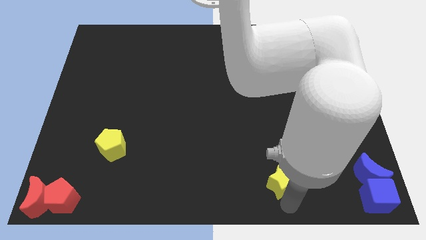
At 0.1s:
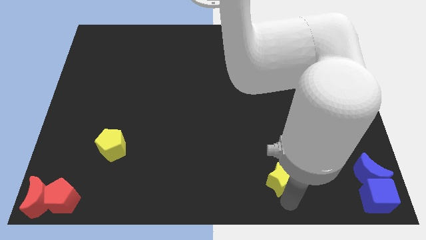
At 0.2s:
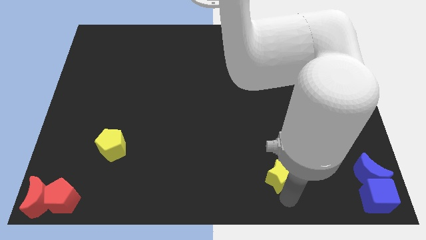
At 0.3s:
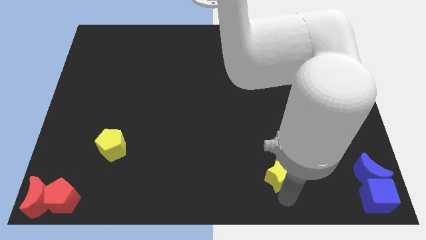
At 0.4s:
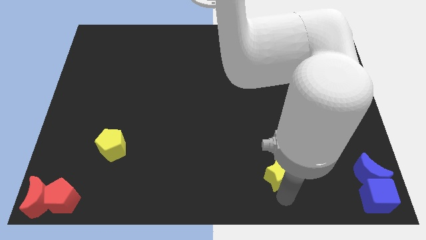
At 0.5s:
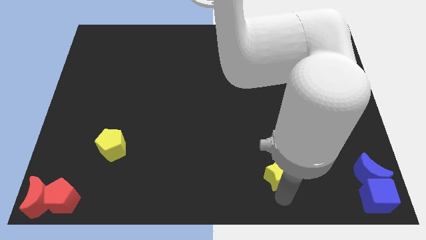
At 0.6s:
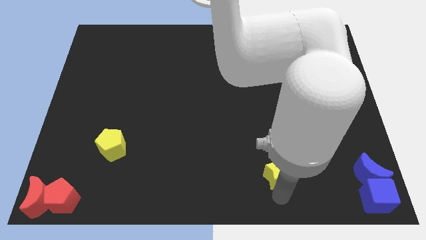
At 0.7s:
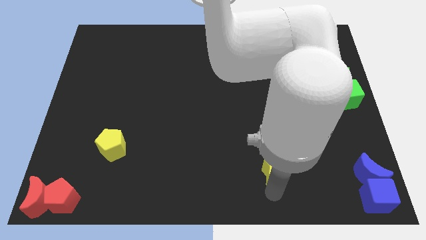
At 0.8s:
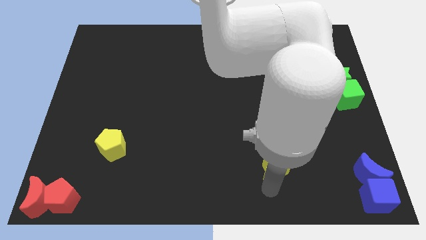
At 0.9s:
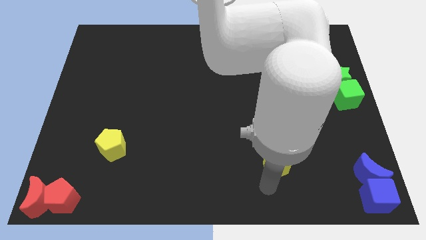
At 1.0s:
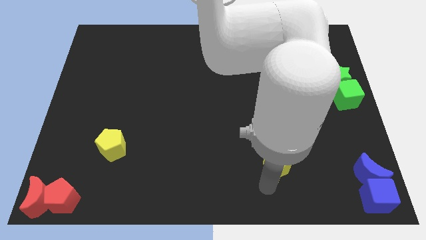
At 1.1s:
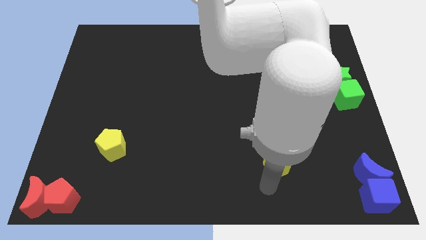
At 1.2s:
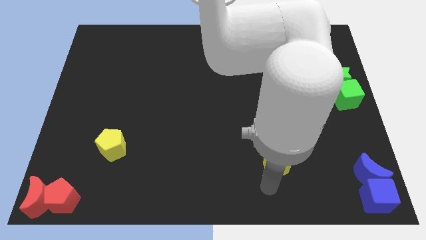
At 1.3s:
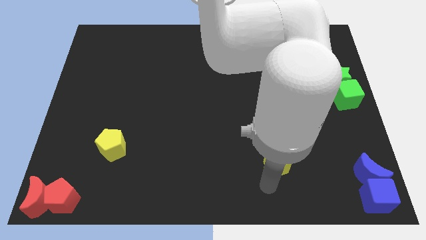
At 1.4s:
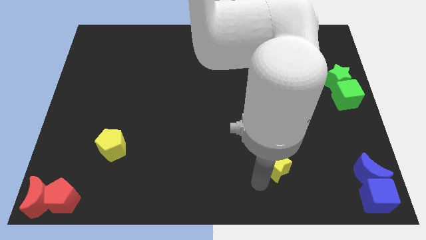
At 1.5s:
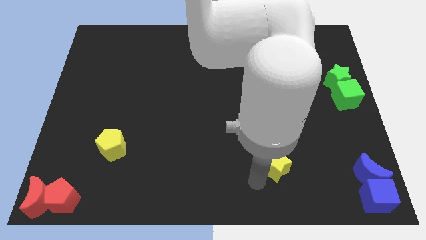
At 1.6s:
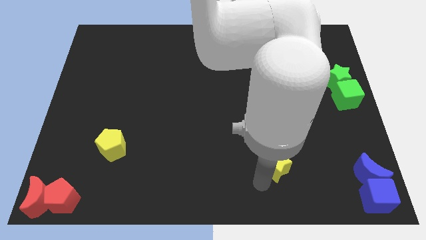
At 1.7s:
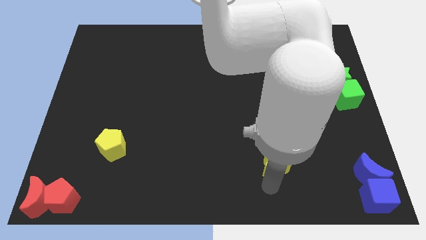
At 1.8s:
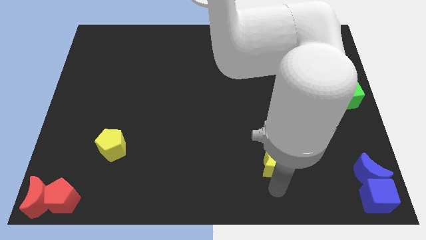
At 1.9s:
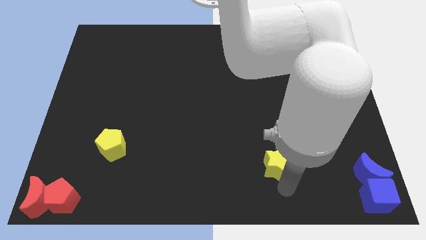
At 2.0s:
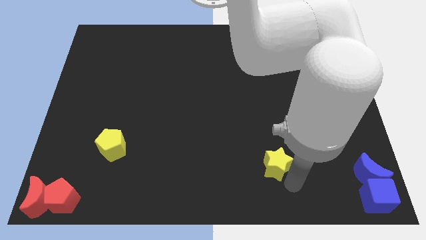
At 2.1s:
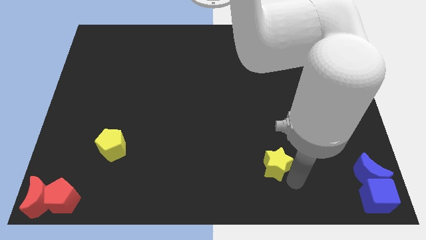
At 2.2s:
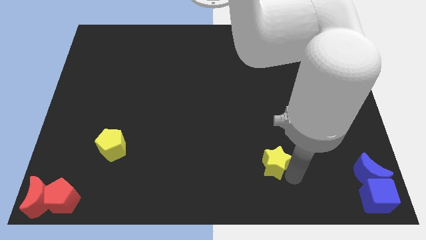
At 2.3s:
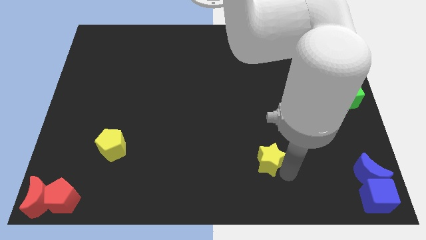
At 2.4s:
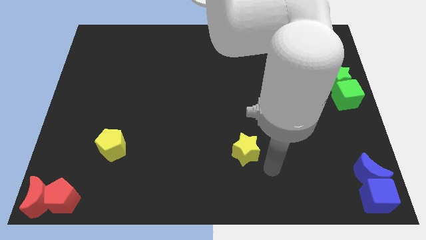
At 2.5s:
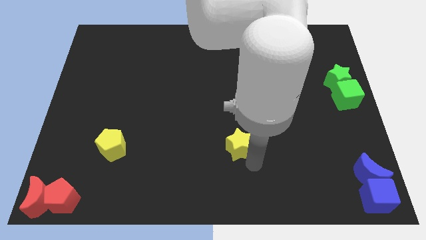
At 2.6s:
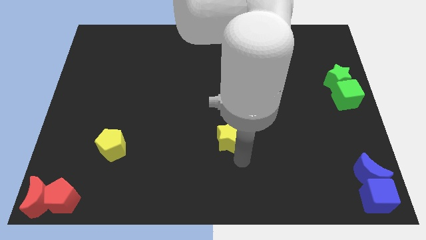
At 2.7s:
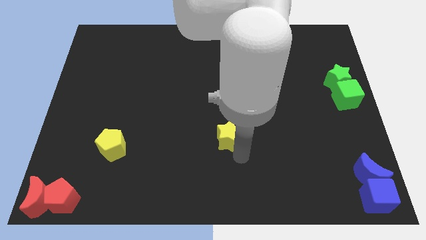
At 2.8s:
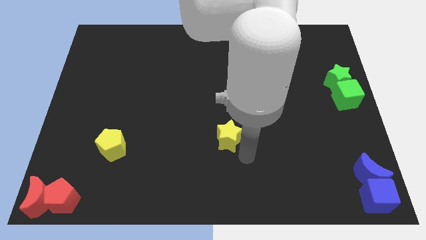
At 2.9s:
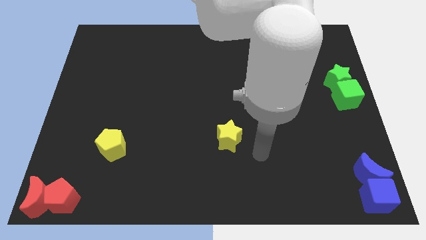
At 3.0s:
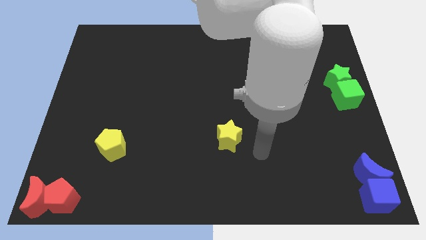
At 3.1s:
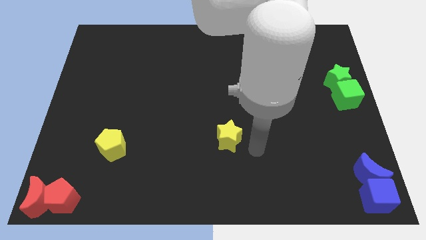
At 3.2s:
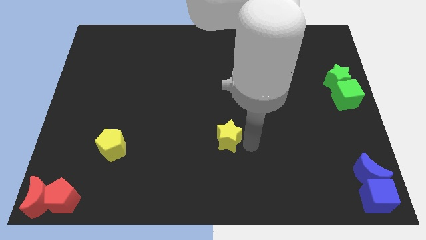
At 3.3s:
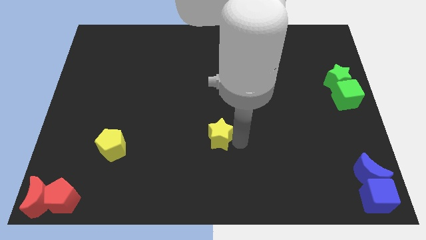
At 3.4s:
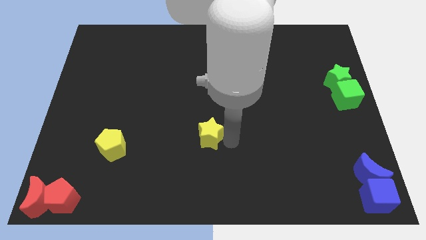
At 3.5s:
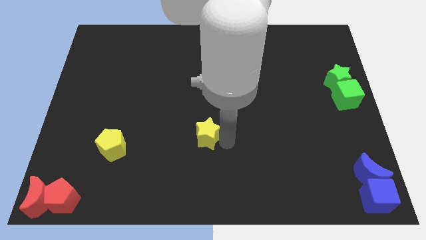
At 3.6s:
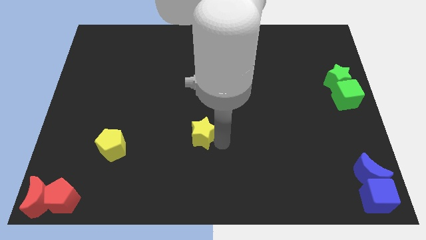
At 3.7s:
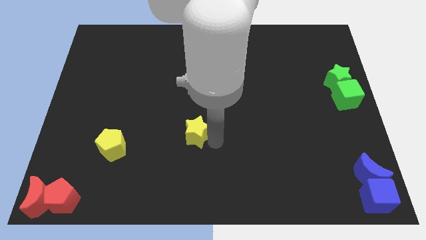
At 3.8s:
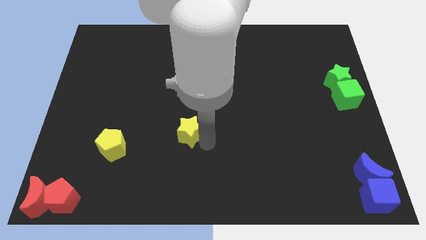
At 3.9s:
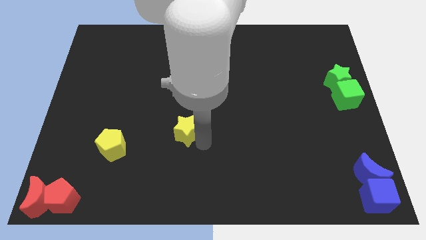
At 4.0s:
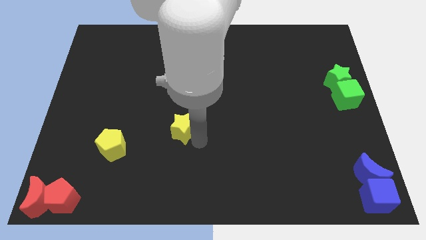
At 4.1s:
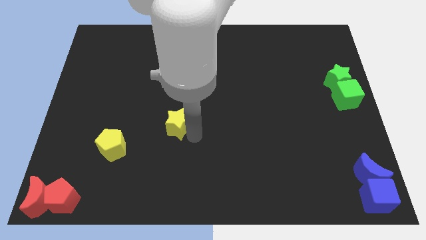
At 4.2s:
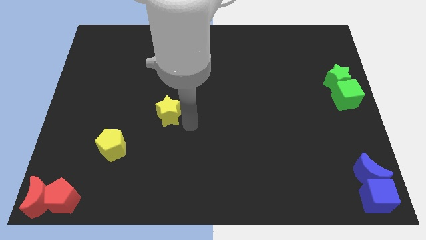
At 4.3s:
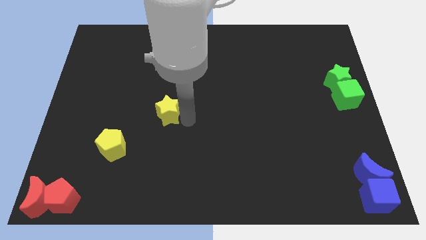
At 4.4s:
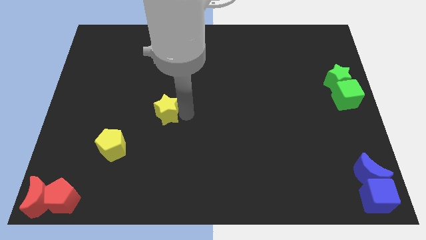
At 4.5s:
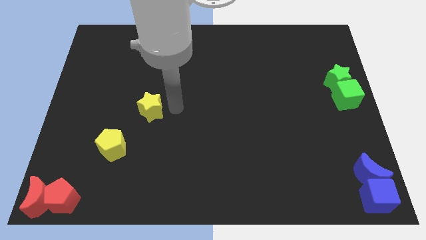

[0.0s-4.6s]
push the yellow star vertical top right to the yellow pentagon

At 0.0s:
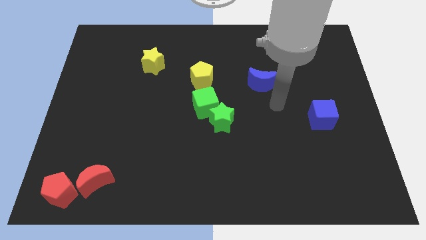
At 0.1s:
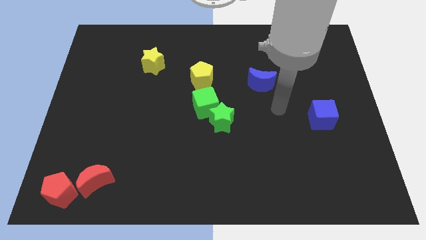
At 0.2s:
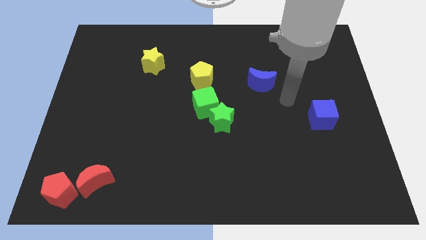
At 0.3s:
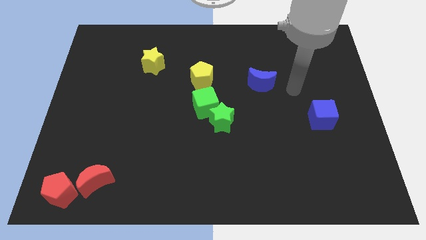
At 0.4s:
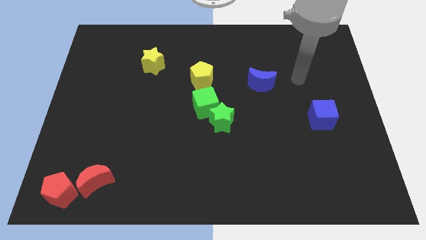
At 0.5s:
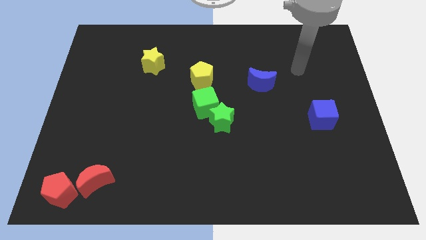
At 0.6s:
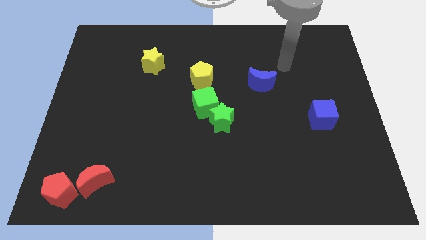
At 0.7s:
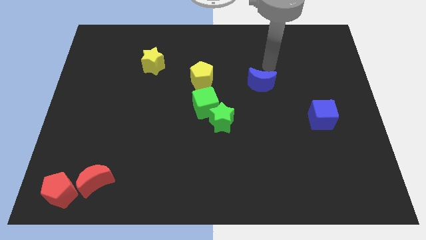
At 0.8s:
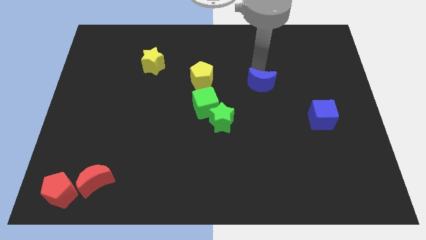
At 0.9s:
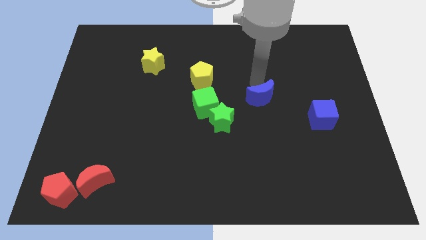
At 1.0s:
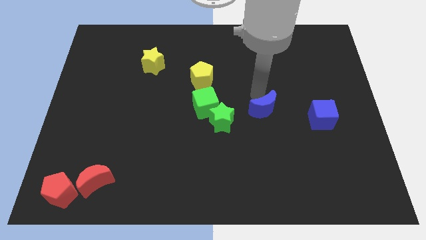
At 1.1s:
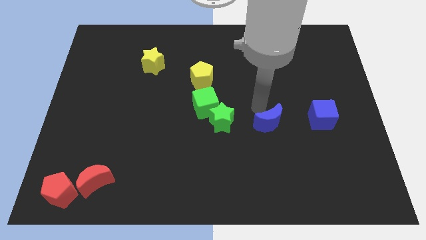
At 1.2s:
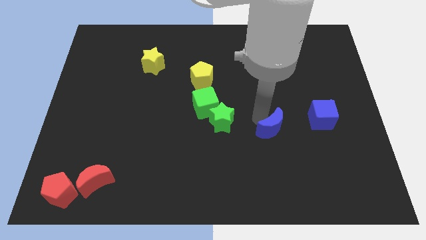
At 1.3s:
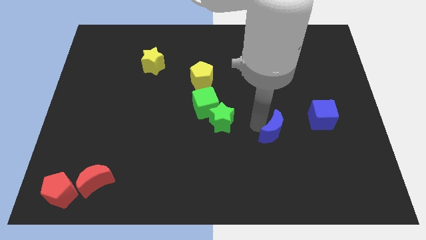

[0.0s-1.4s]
move the blue moon in between the green star and blue cube

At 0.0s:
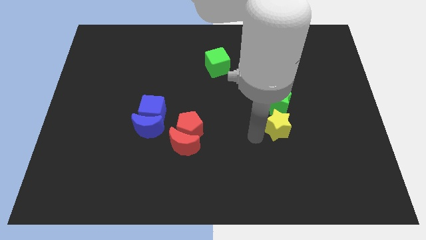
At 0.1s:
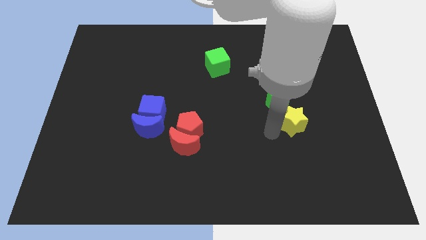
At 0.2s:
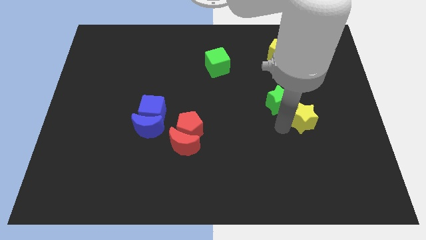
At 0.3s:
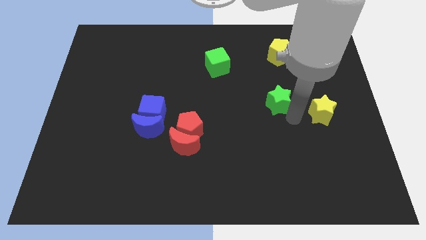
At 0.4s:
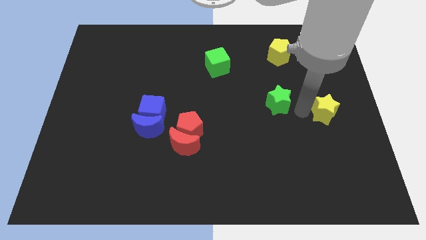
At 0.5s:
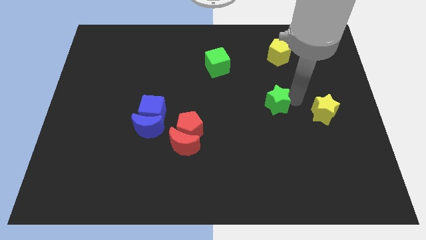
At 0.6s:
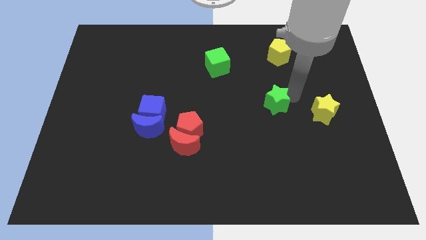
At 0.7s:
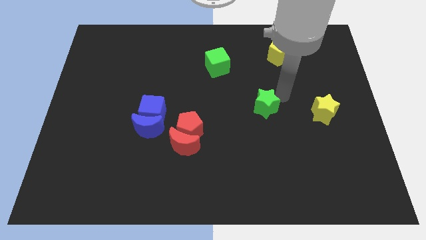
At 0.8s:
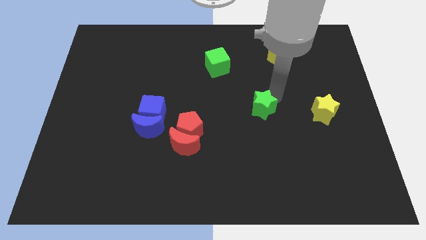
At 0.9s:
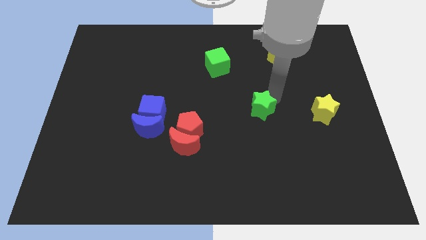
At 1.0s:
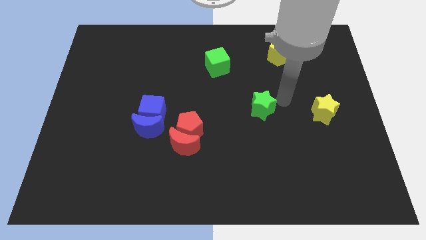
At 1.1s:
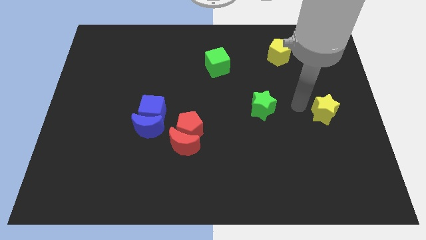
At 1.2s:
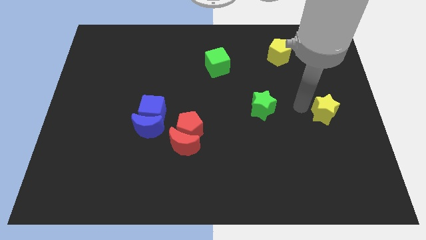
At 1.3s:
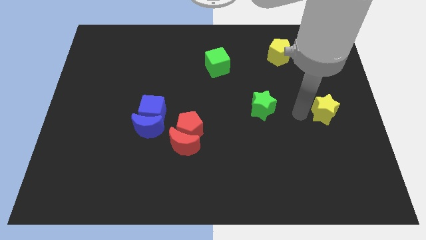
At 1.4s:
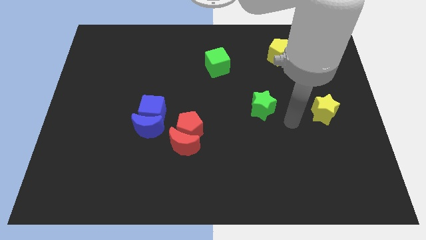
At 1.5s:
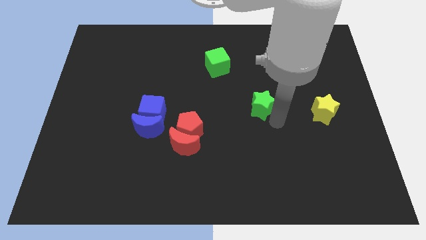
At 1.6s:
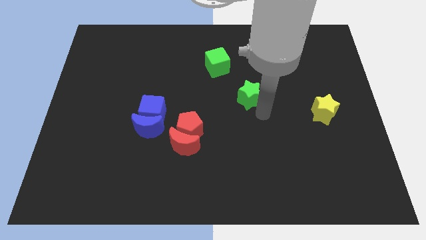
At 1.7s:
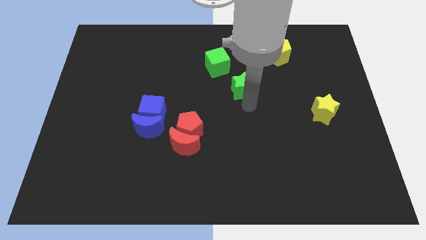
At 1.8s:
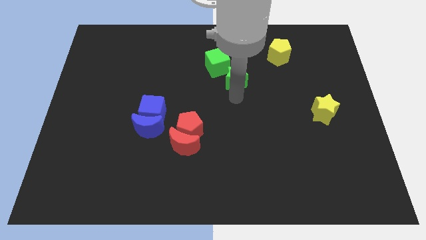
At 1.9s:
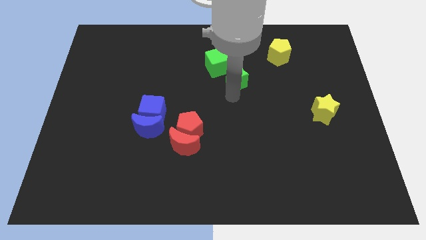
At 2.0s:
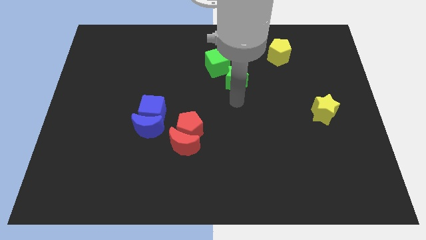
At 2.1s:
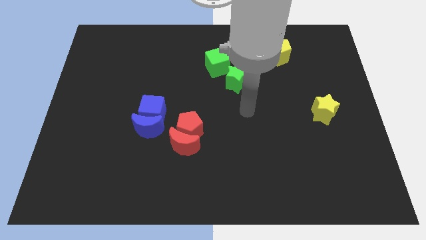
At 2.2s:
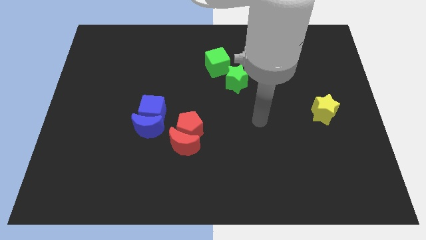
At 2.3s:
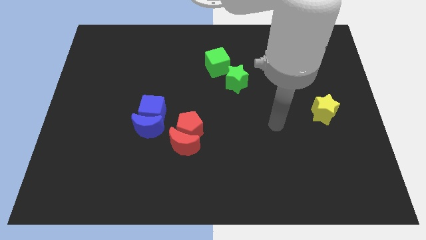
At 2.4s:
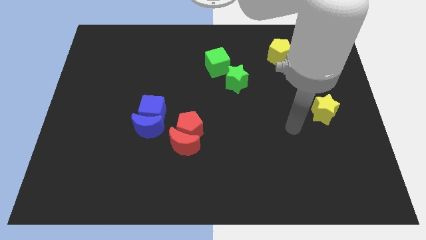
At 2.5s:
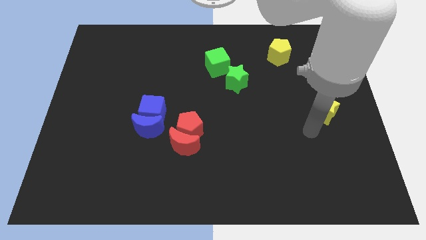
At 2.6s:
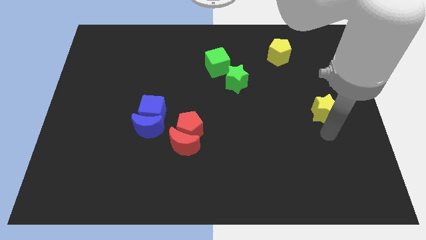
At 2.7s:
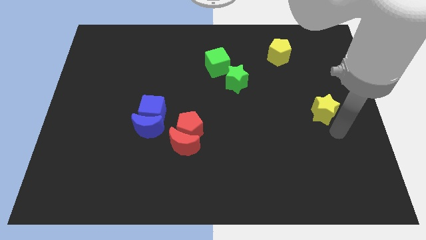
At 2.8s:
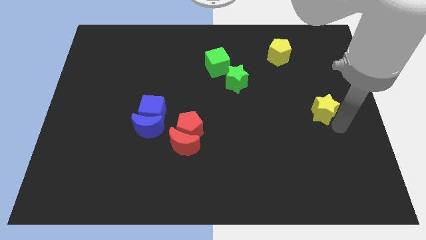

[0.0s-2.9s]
push the green star close to the green cube
